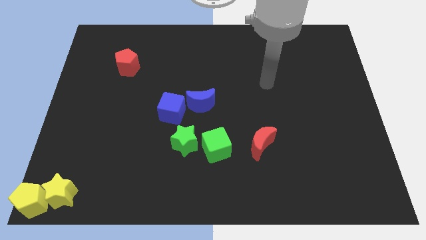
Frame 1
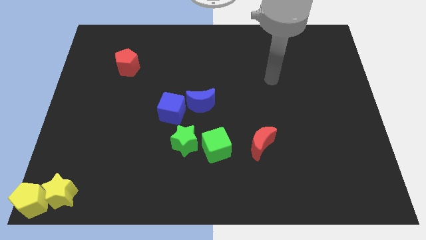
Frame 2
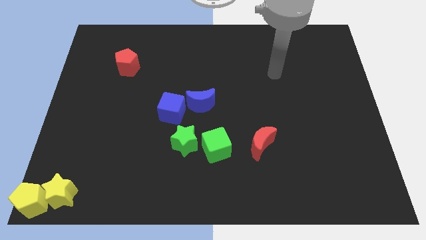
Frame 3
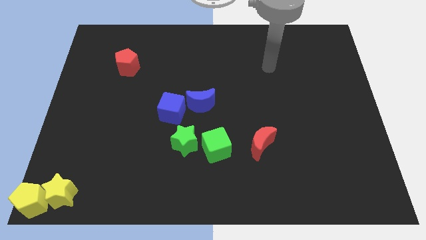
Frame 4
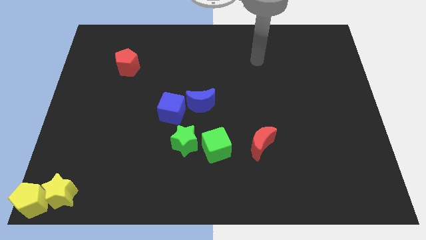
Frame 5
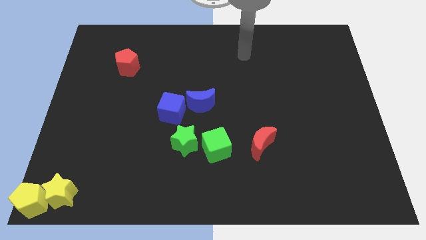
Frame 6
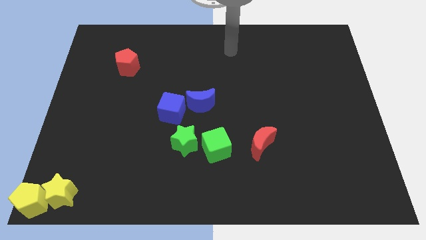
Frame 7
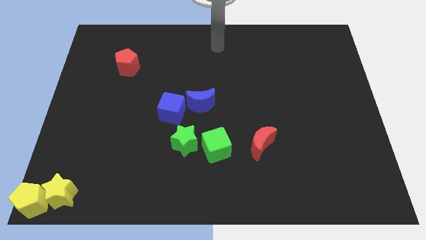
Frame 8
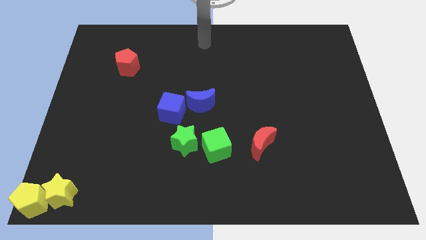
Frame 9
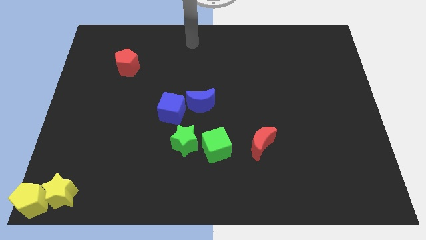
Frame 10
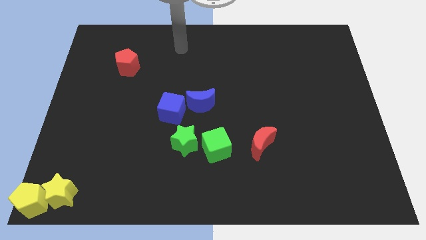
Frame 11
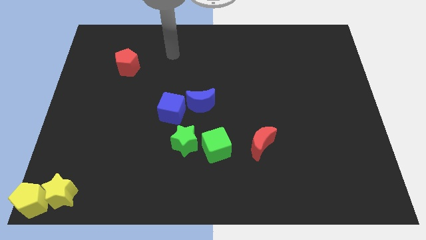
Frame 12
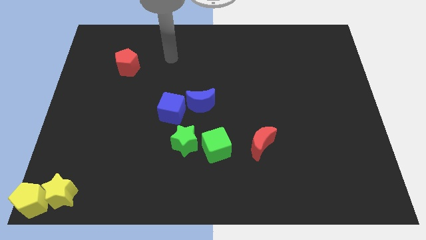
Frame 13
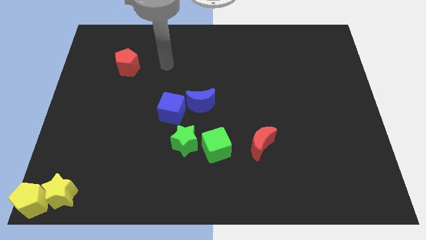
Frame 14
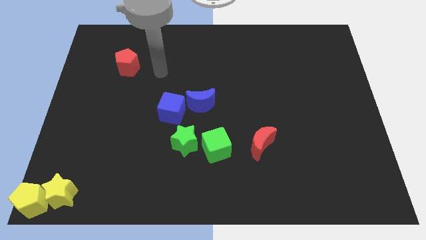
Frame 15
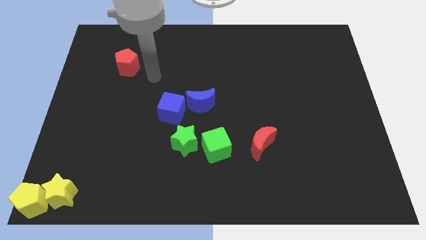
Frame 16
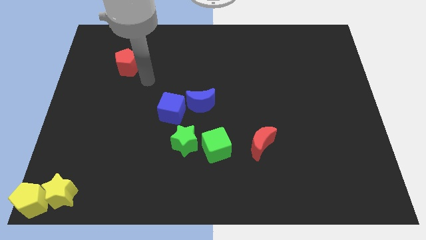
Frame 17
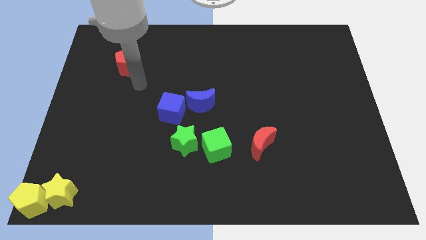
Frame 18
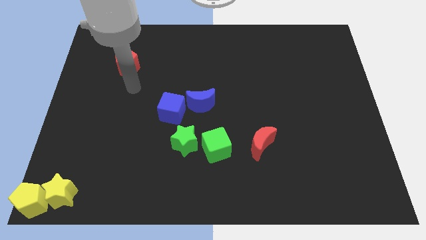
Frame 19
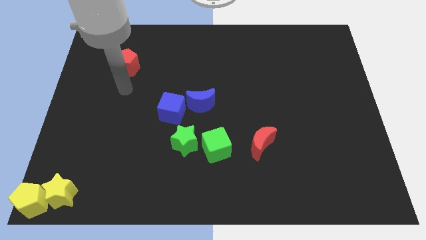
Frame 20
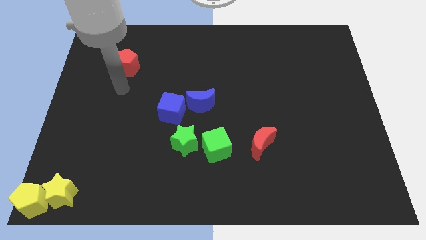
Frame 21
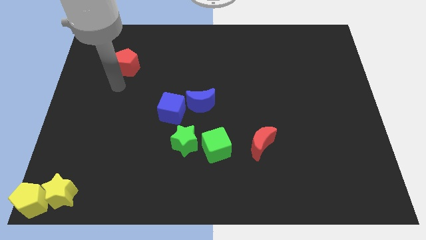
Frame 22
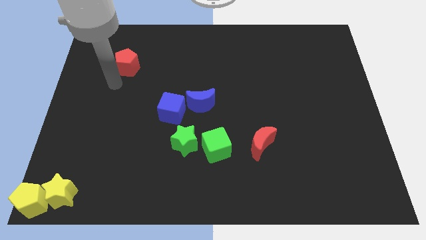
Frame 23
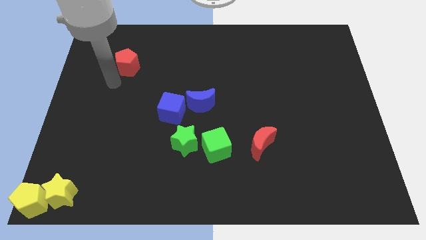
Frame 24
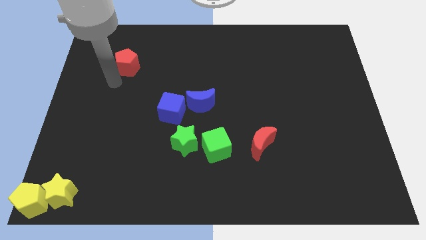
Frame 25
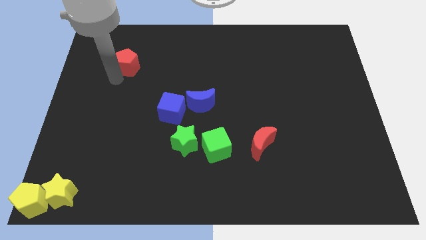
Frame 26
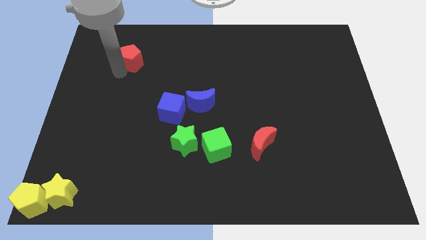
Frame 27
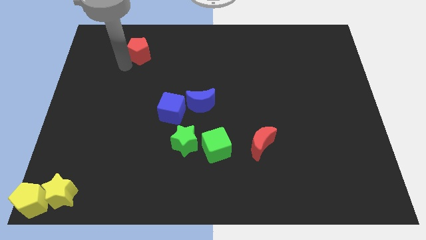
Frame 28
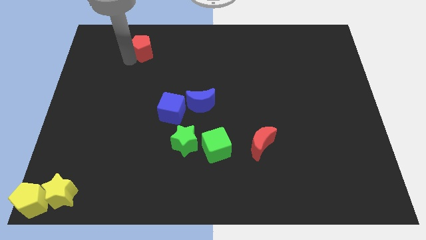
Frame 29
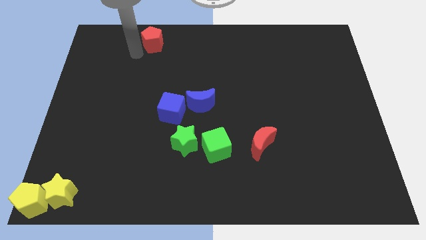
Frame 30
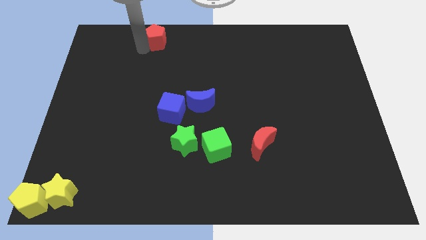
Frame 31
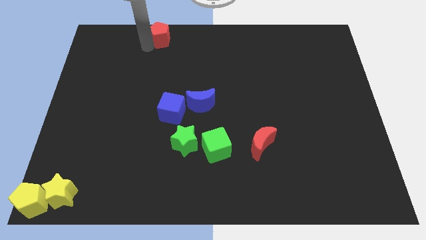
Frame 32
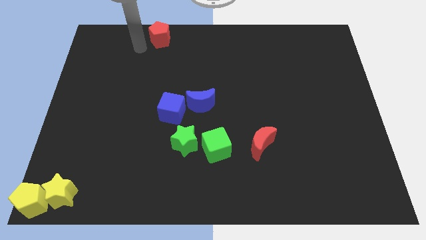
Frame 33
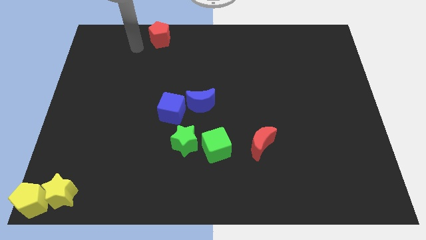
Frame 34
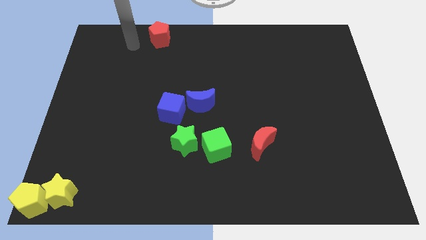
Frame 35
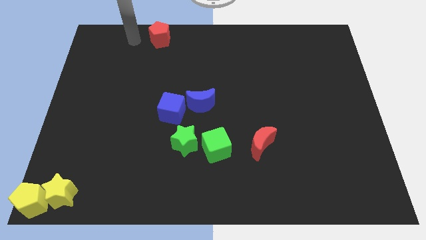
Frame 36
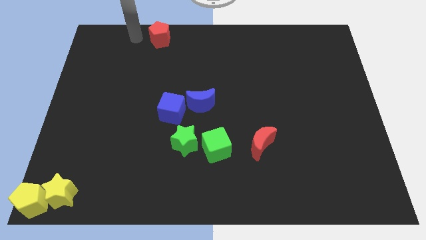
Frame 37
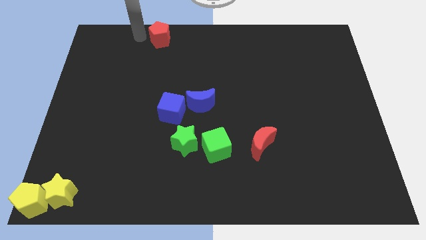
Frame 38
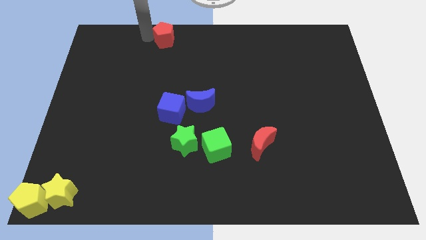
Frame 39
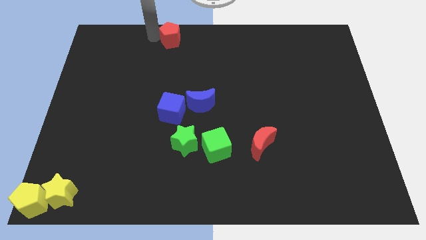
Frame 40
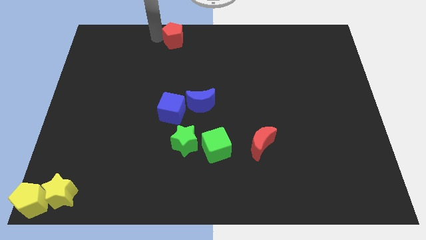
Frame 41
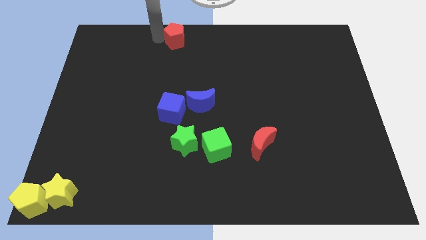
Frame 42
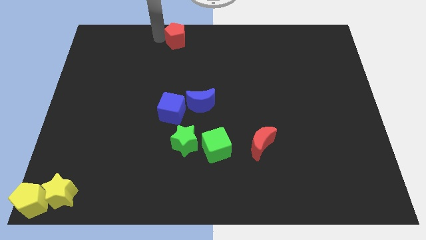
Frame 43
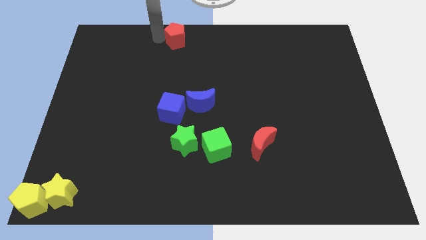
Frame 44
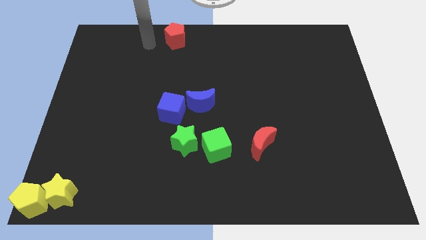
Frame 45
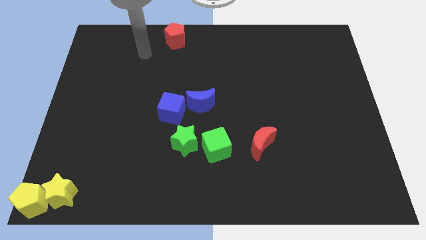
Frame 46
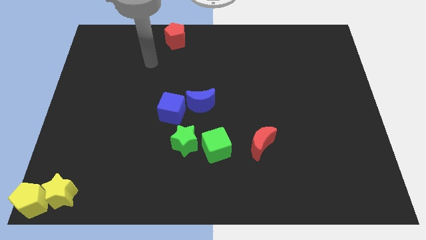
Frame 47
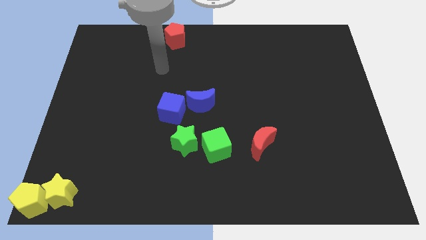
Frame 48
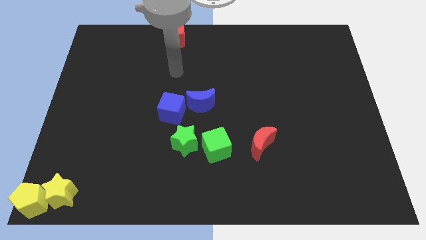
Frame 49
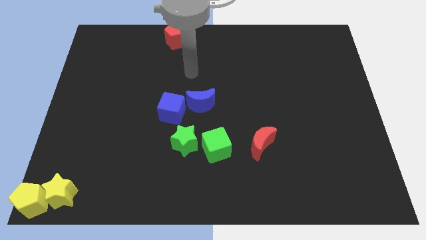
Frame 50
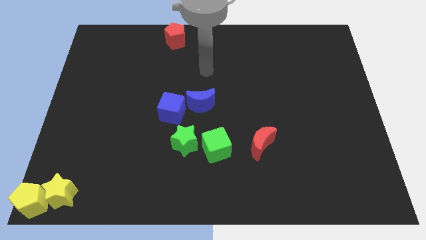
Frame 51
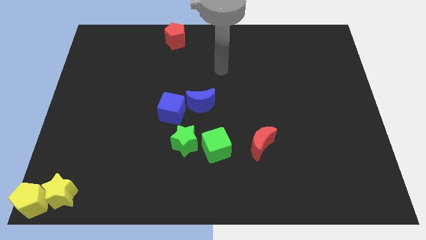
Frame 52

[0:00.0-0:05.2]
push the red pentagon slightly towards the top center of the board

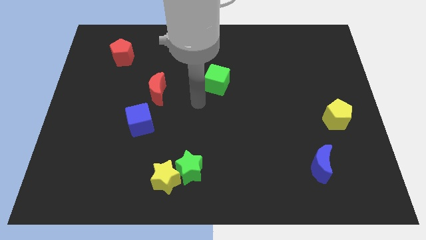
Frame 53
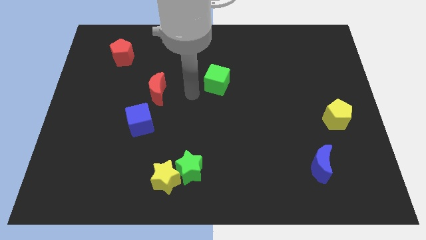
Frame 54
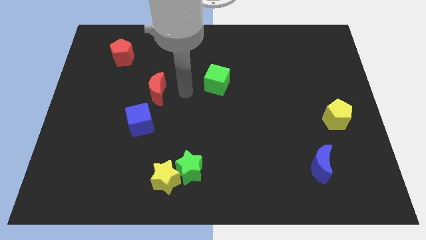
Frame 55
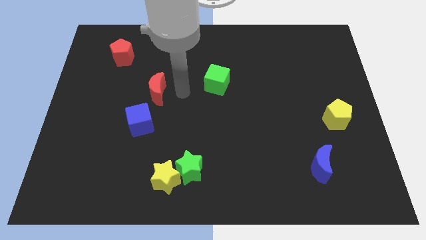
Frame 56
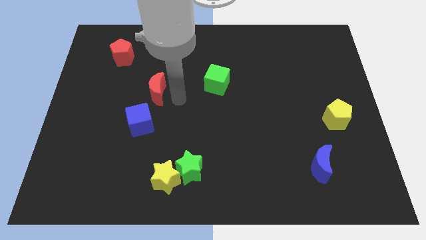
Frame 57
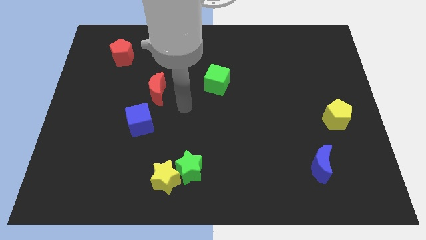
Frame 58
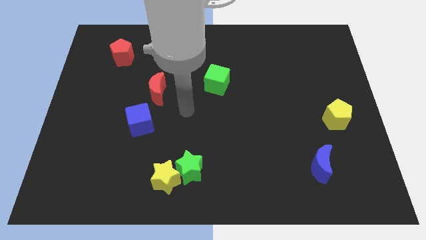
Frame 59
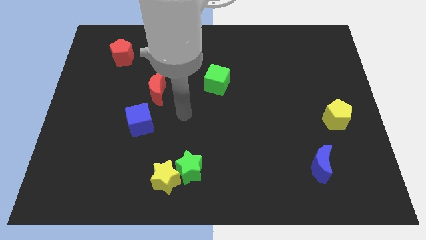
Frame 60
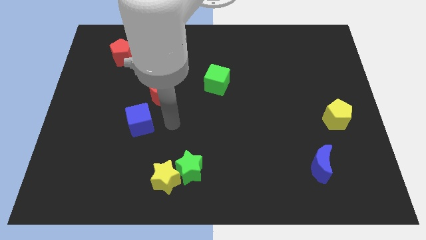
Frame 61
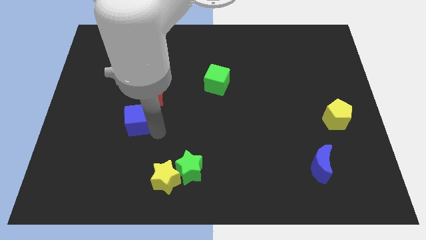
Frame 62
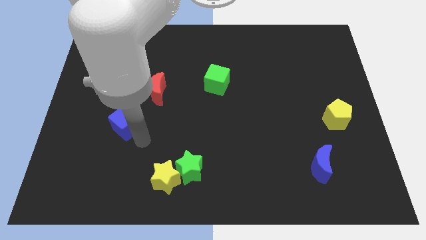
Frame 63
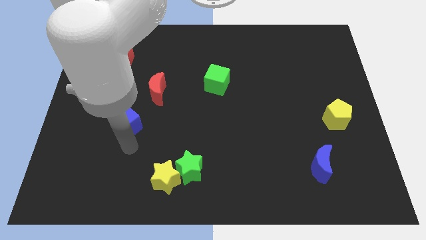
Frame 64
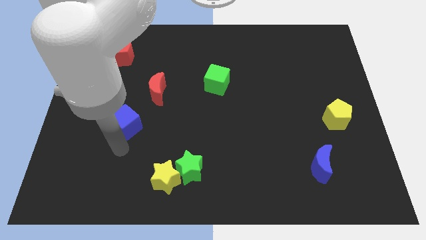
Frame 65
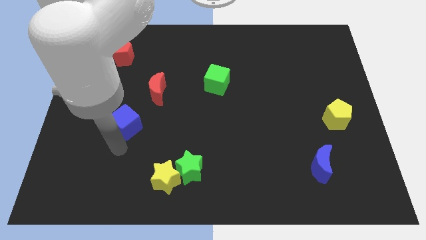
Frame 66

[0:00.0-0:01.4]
slightly push the blue cube towards the left side of the board

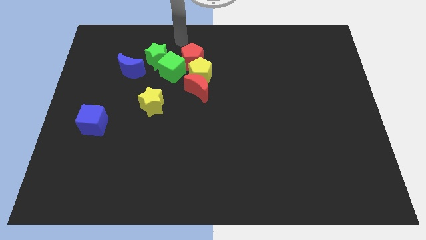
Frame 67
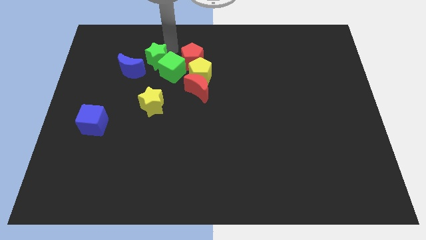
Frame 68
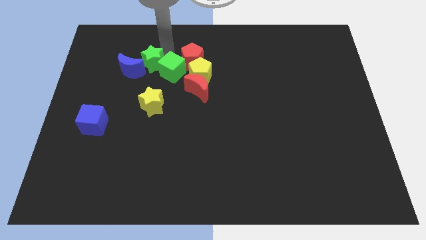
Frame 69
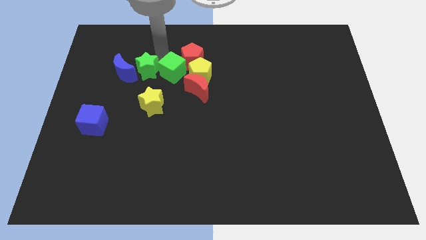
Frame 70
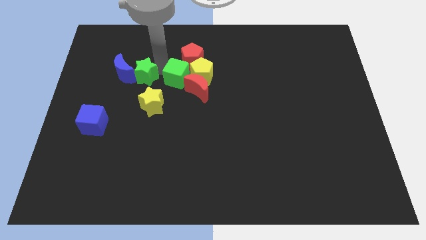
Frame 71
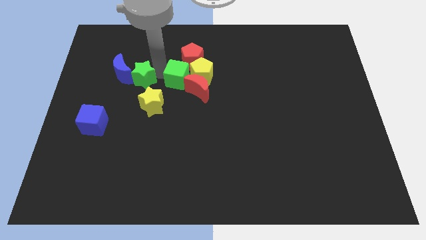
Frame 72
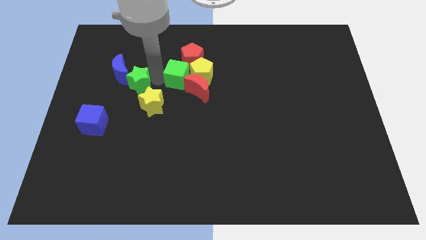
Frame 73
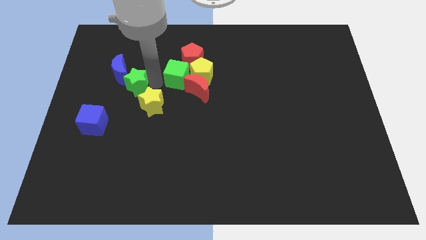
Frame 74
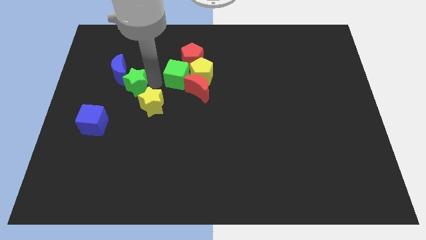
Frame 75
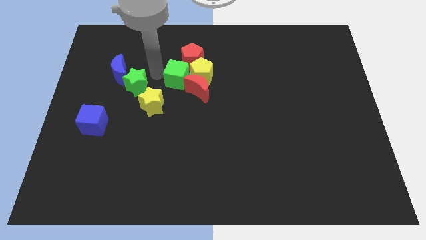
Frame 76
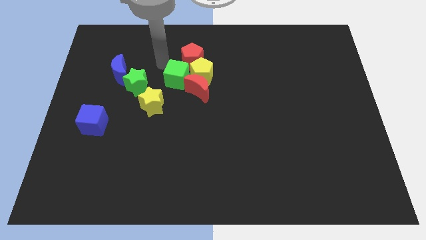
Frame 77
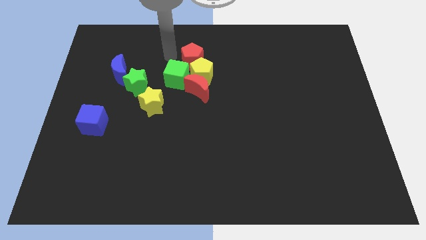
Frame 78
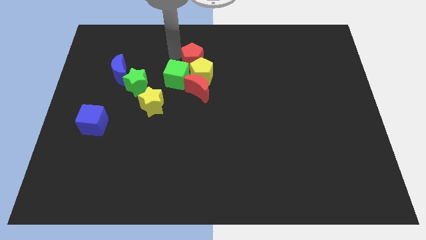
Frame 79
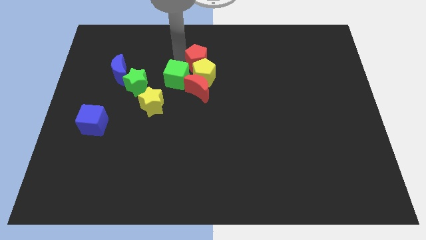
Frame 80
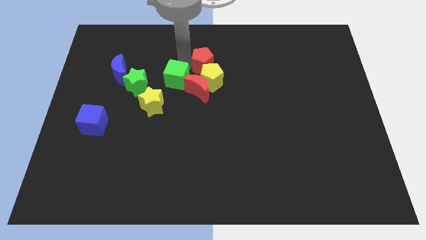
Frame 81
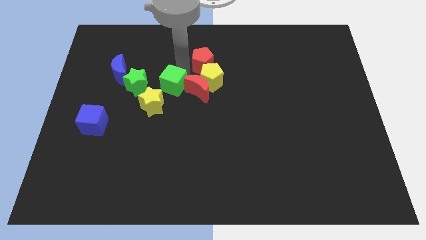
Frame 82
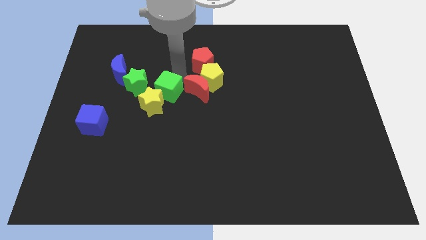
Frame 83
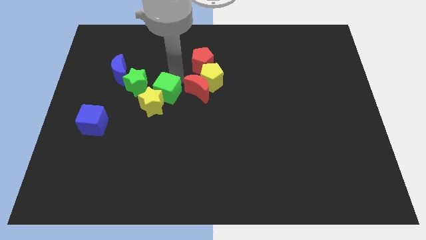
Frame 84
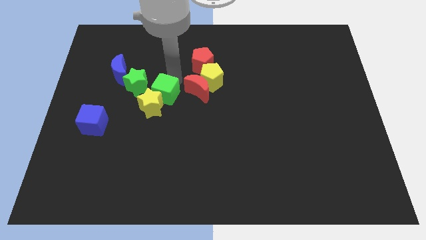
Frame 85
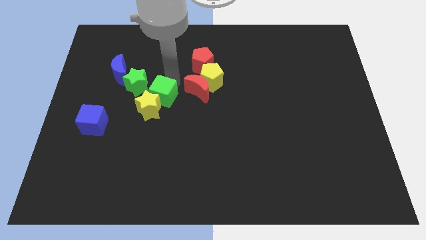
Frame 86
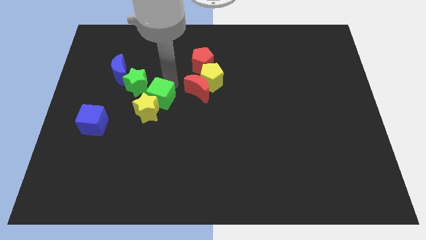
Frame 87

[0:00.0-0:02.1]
push the green cube into the yellow star

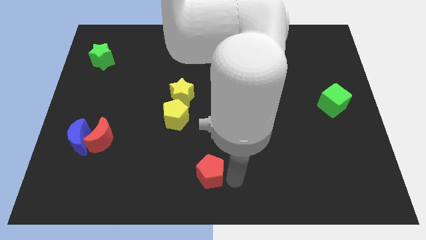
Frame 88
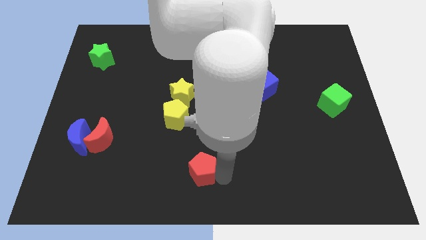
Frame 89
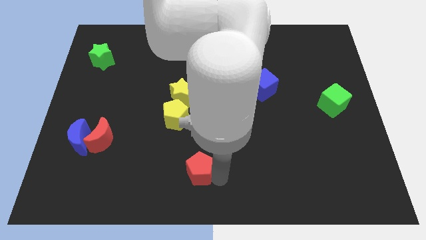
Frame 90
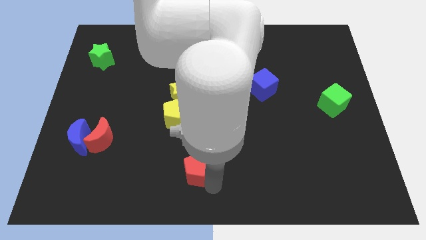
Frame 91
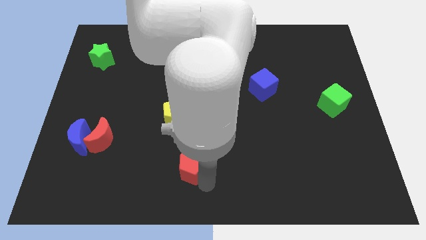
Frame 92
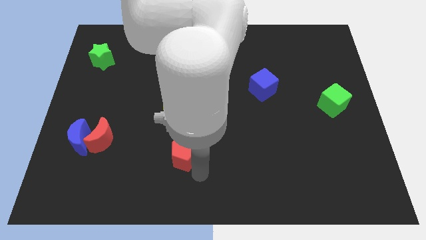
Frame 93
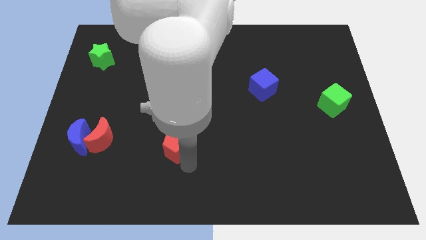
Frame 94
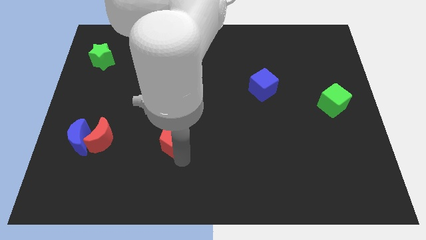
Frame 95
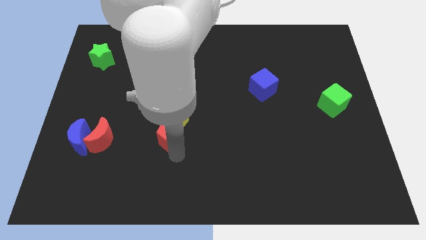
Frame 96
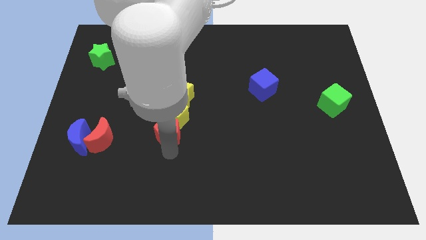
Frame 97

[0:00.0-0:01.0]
push the red pentagon towards the yellow pentagon
